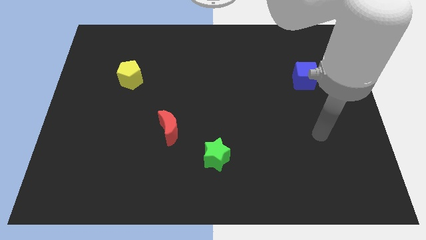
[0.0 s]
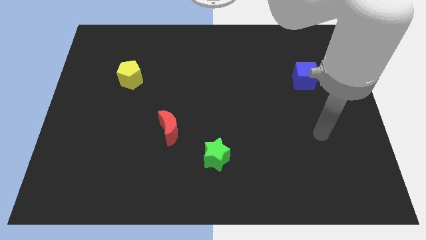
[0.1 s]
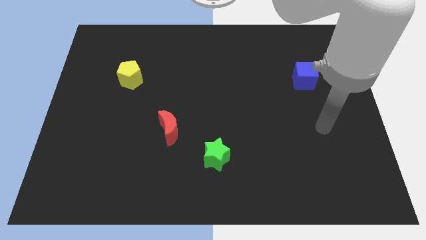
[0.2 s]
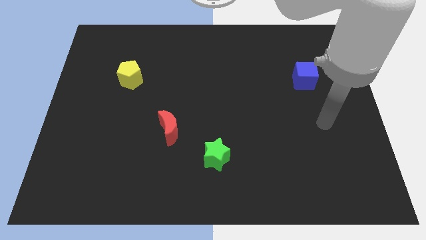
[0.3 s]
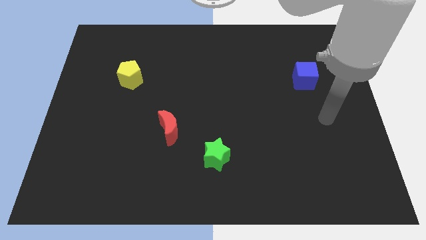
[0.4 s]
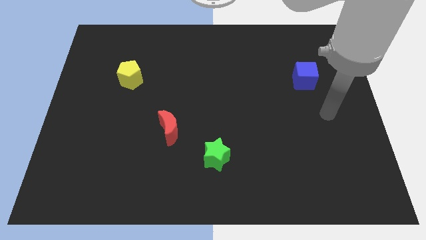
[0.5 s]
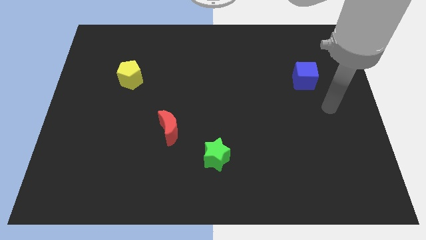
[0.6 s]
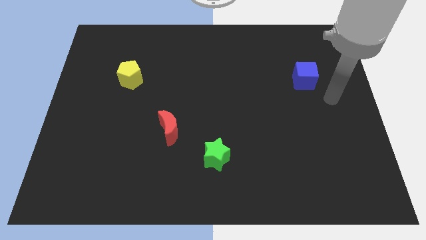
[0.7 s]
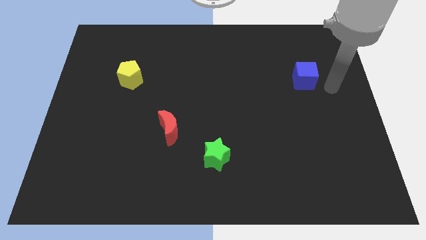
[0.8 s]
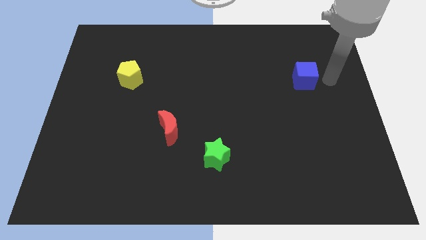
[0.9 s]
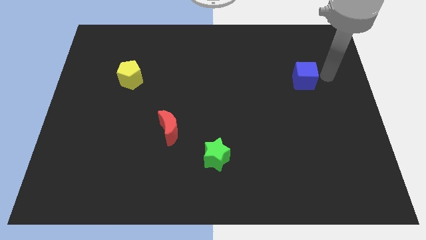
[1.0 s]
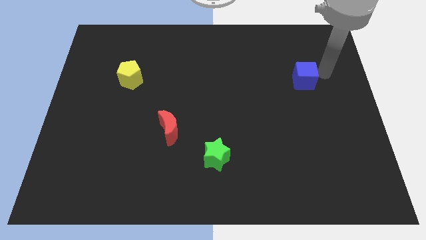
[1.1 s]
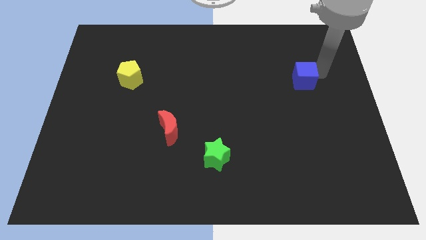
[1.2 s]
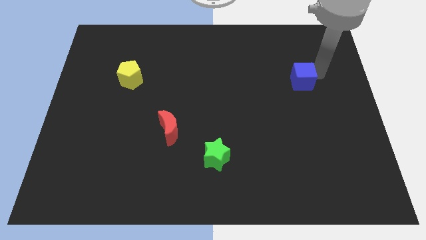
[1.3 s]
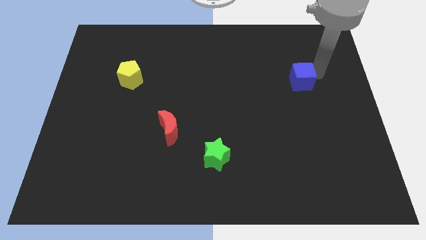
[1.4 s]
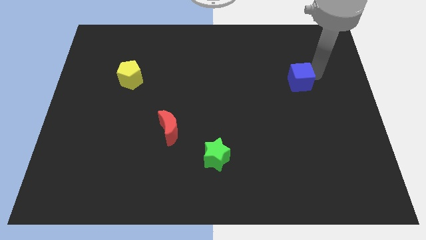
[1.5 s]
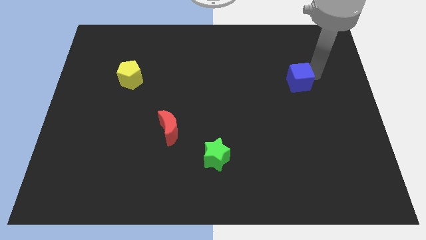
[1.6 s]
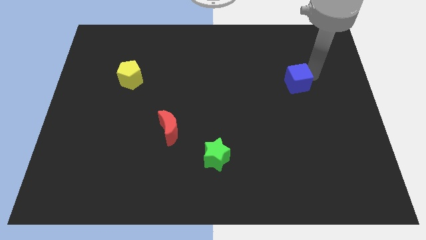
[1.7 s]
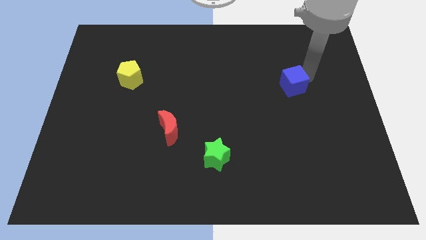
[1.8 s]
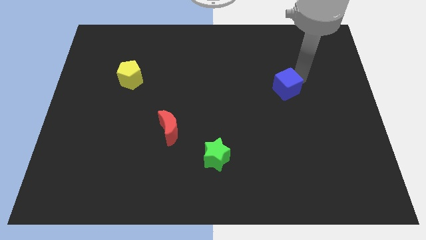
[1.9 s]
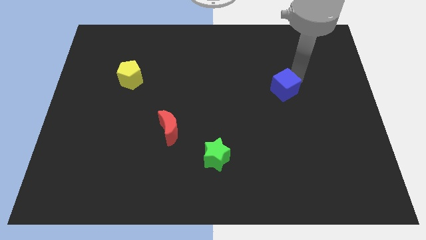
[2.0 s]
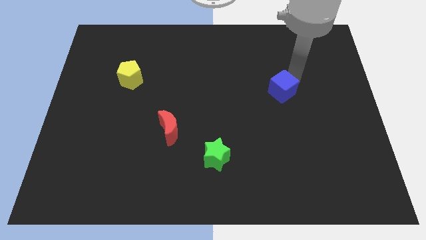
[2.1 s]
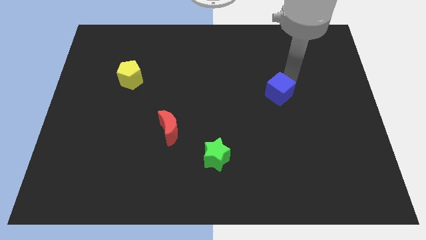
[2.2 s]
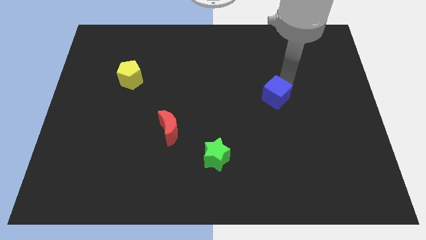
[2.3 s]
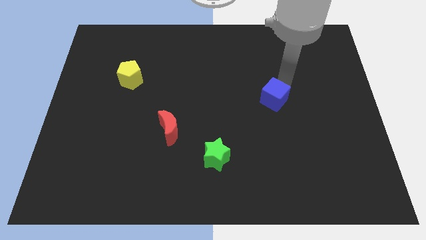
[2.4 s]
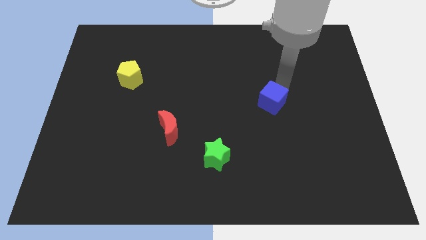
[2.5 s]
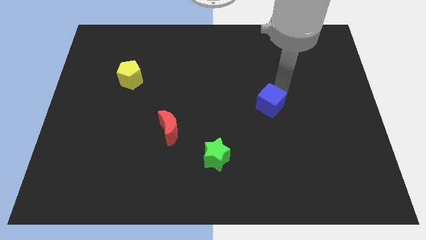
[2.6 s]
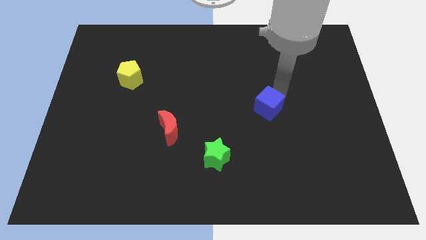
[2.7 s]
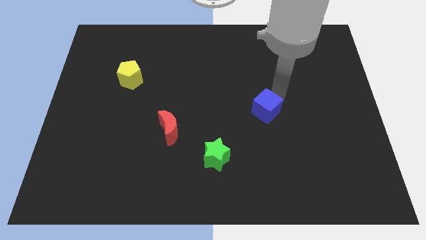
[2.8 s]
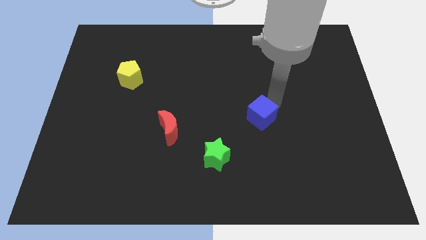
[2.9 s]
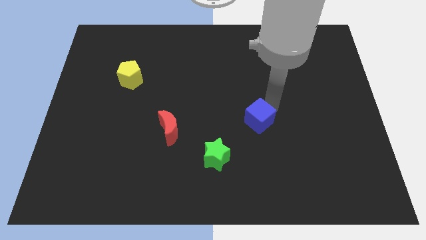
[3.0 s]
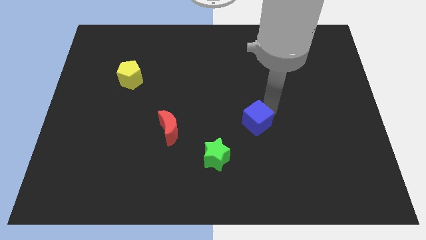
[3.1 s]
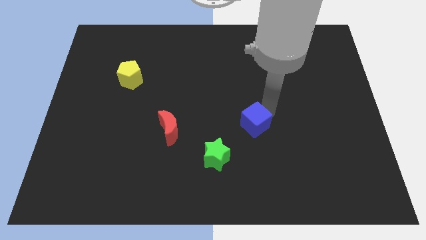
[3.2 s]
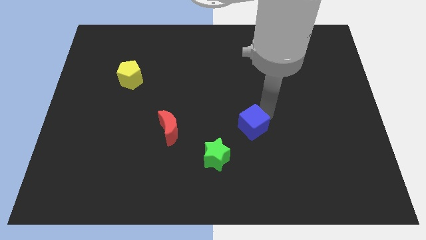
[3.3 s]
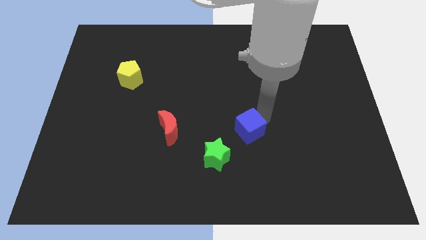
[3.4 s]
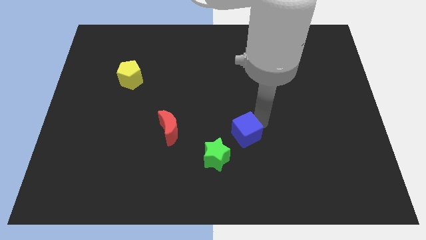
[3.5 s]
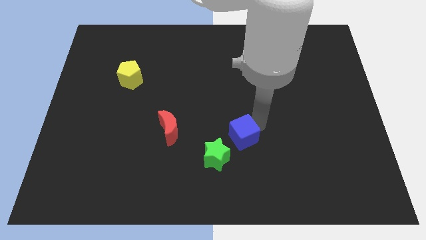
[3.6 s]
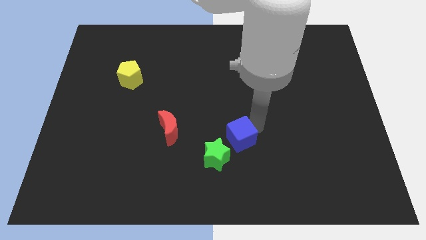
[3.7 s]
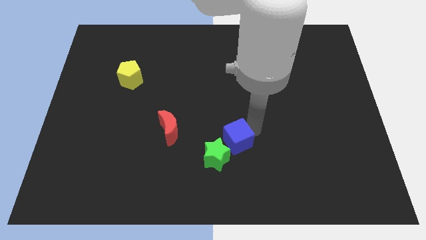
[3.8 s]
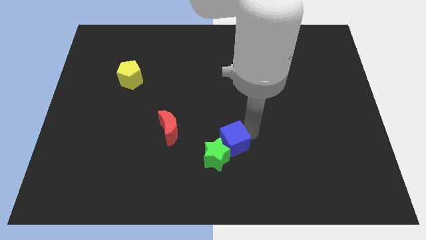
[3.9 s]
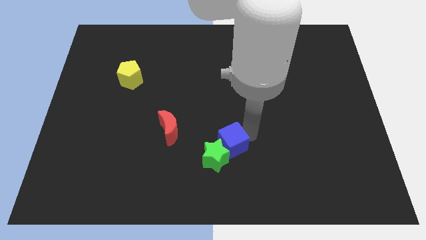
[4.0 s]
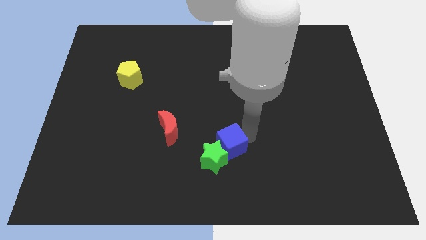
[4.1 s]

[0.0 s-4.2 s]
slide the blue block close to the star

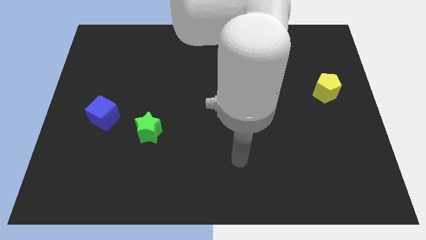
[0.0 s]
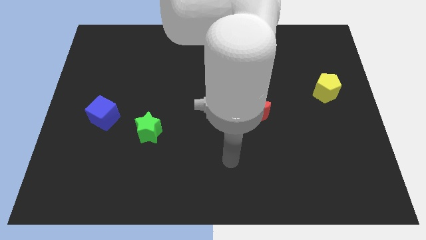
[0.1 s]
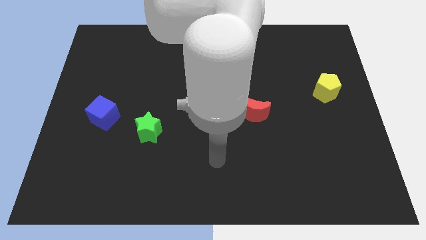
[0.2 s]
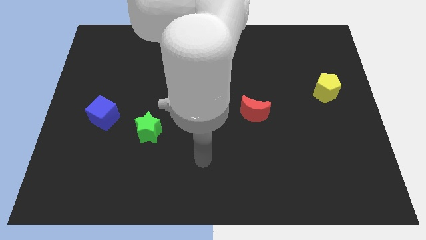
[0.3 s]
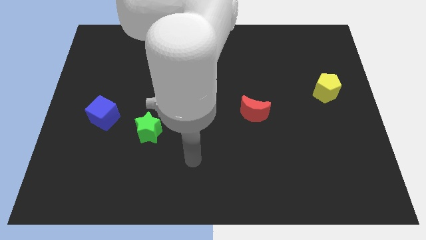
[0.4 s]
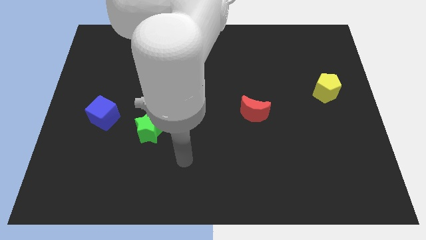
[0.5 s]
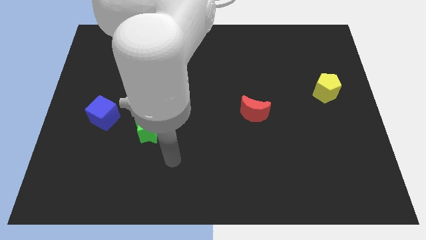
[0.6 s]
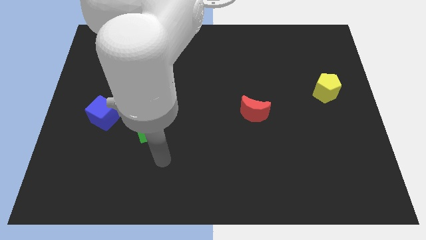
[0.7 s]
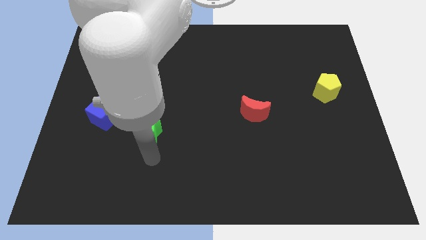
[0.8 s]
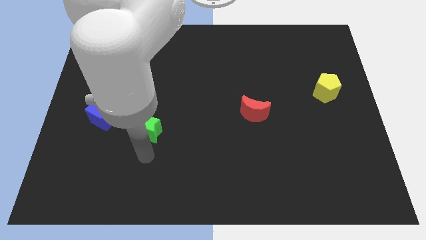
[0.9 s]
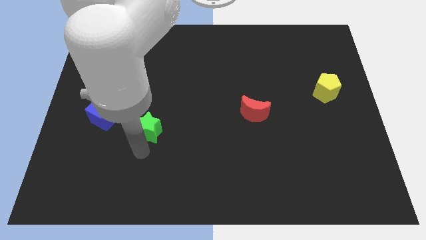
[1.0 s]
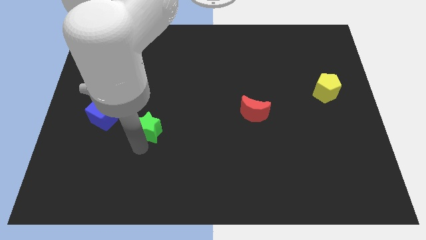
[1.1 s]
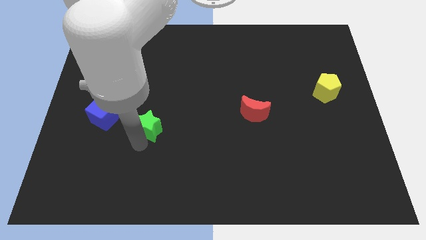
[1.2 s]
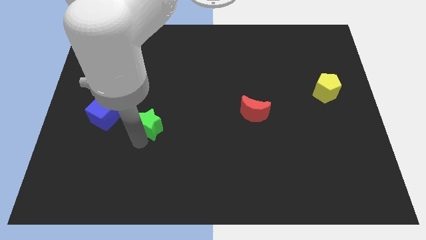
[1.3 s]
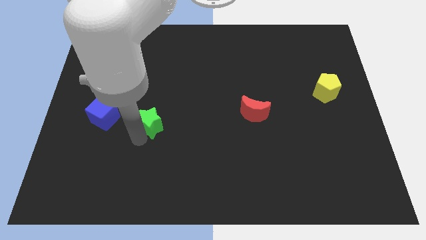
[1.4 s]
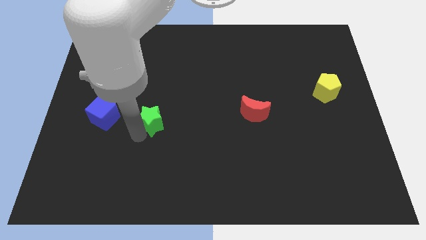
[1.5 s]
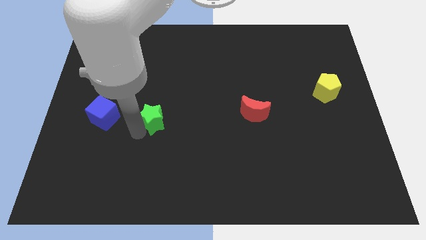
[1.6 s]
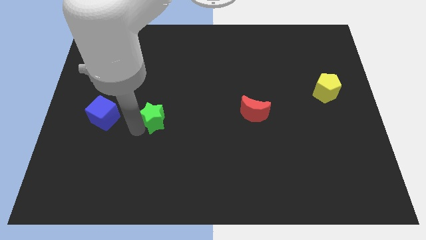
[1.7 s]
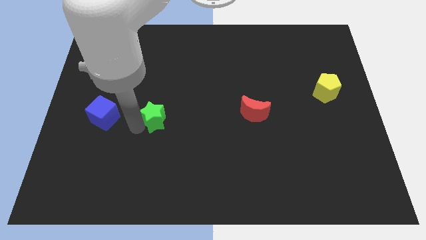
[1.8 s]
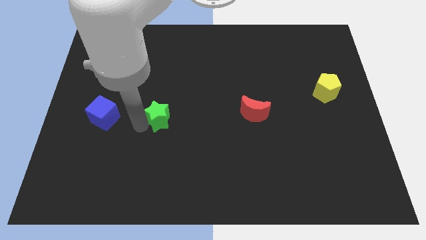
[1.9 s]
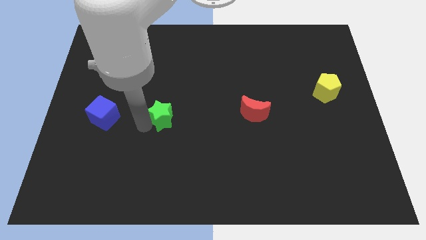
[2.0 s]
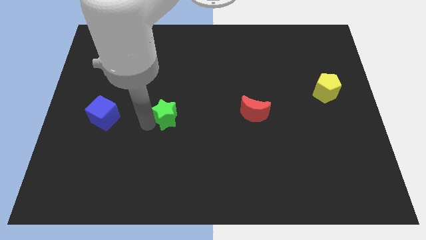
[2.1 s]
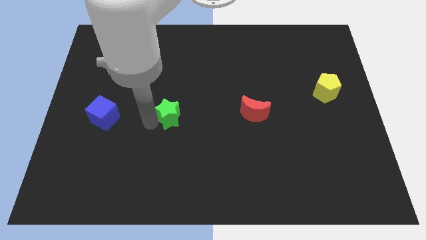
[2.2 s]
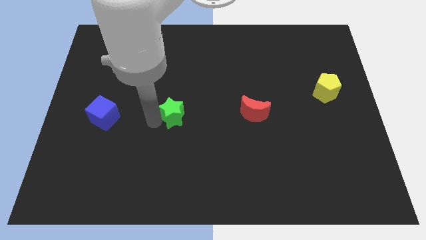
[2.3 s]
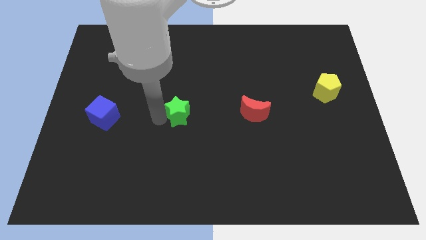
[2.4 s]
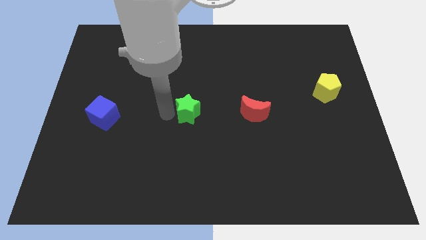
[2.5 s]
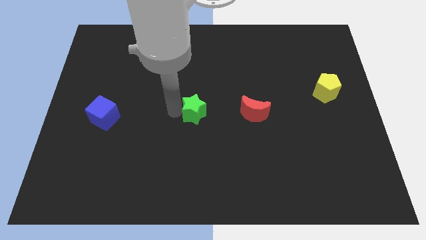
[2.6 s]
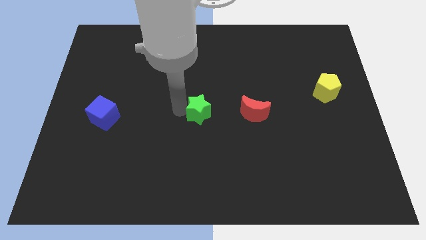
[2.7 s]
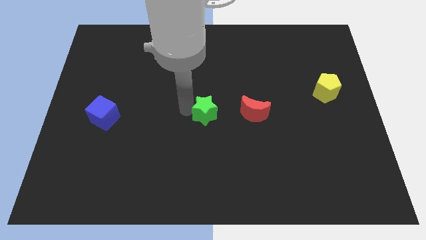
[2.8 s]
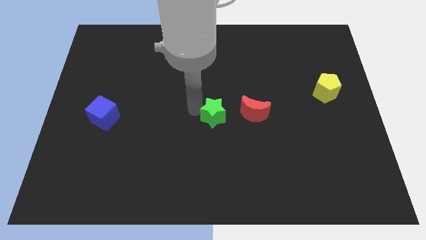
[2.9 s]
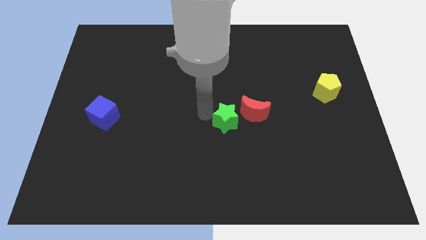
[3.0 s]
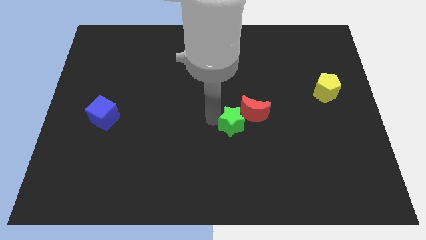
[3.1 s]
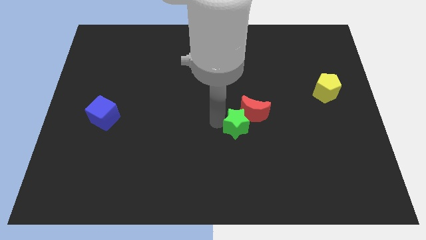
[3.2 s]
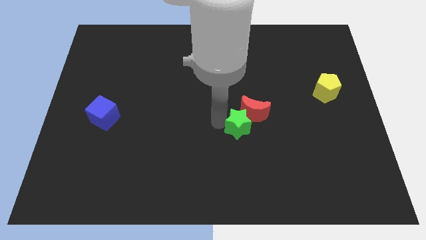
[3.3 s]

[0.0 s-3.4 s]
slide the green block to the moon

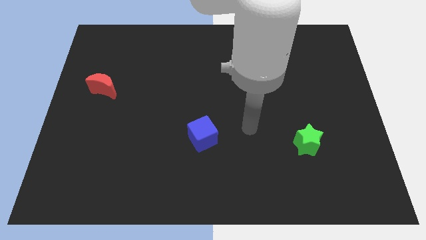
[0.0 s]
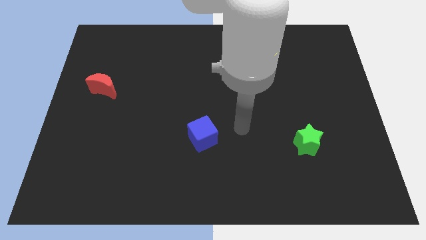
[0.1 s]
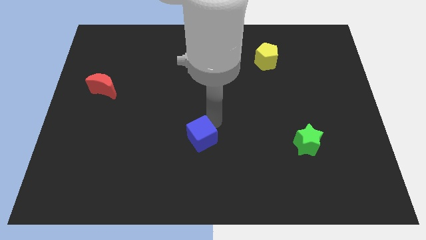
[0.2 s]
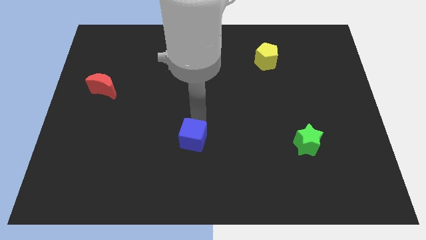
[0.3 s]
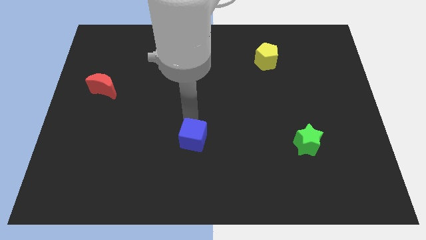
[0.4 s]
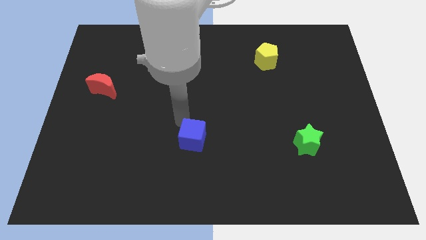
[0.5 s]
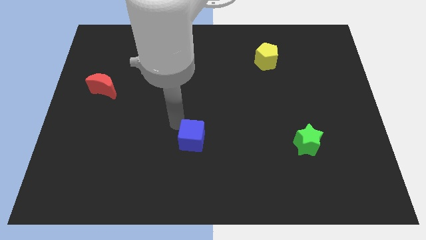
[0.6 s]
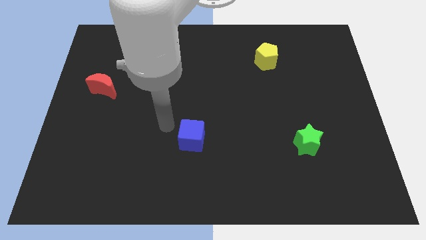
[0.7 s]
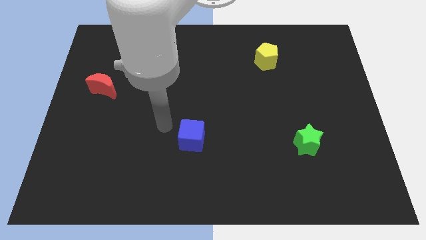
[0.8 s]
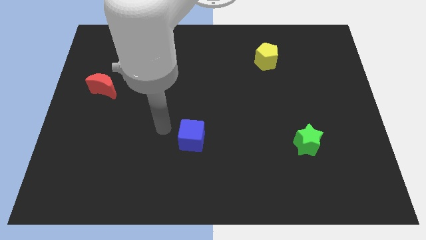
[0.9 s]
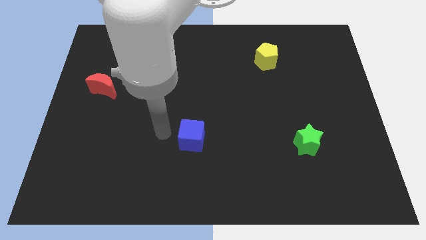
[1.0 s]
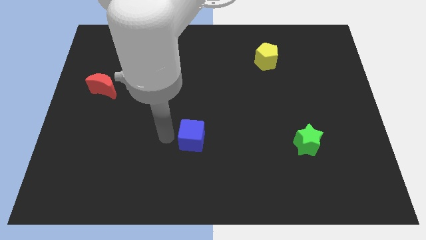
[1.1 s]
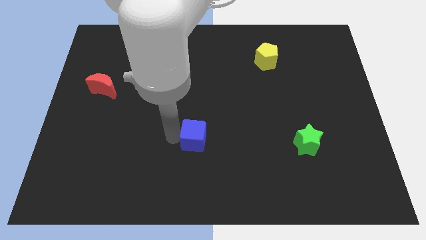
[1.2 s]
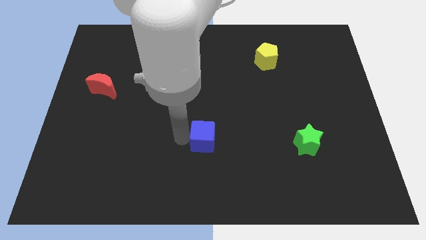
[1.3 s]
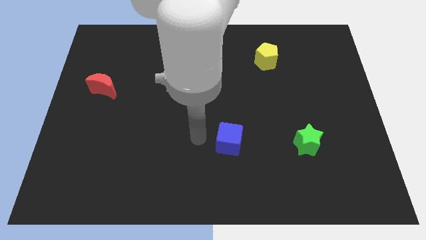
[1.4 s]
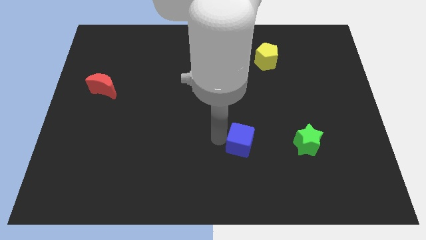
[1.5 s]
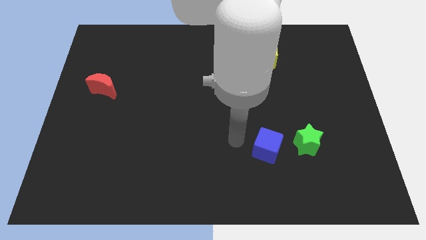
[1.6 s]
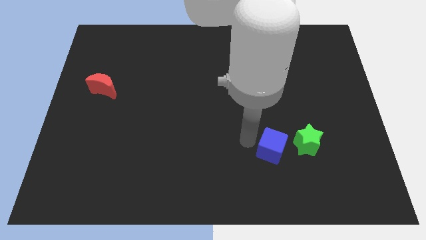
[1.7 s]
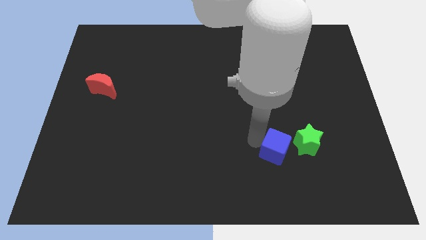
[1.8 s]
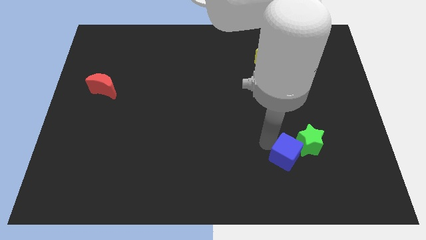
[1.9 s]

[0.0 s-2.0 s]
slide the cube next to the star
